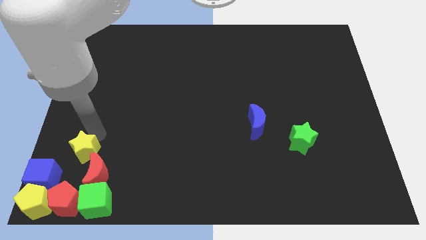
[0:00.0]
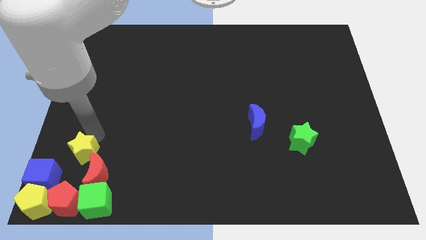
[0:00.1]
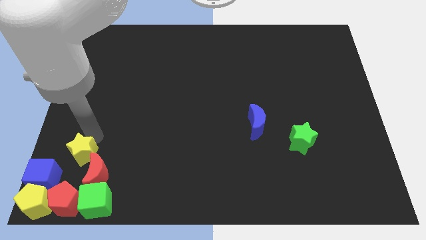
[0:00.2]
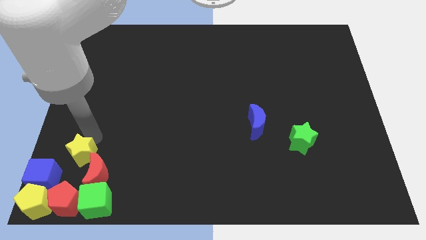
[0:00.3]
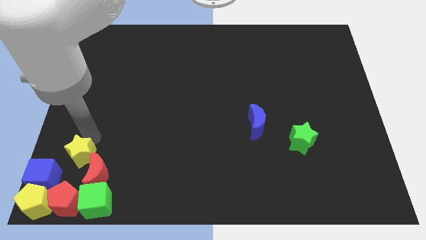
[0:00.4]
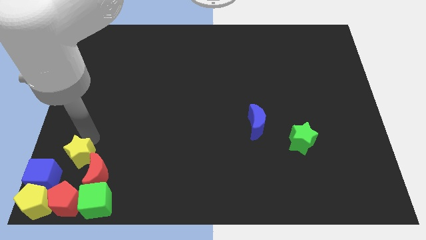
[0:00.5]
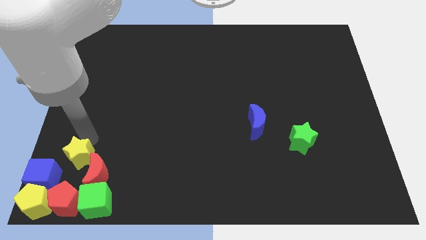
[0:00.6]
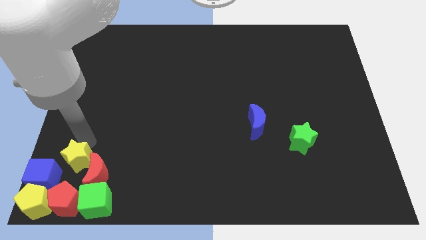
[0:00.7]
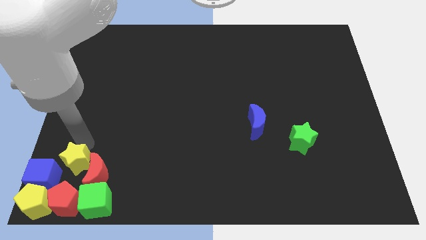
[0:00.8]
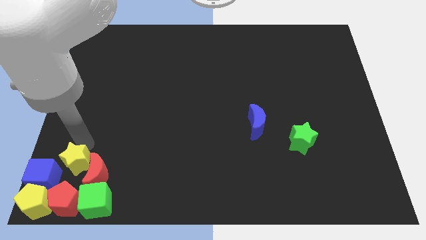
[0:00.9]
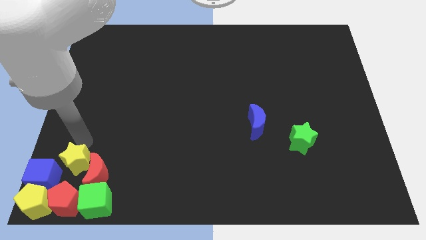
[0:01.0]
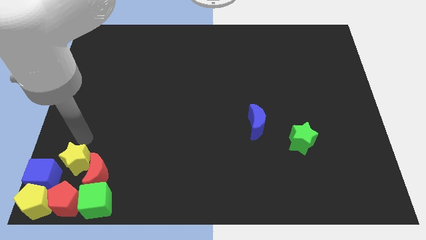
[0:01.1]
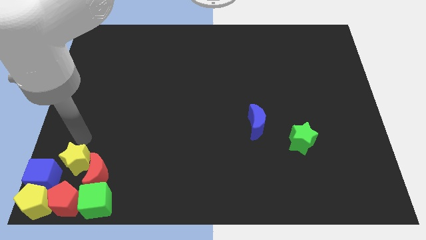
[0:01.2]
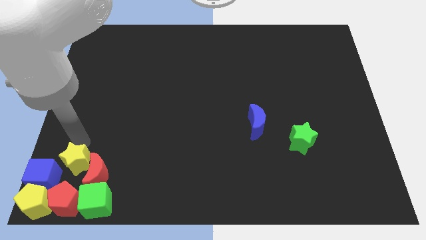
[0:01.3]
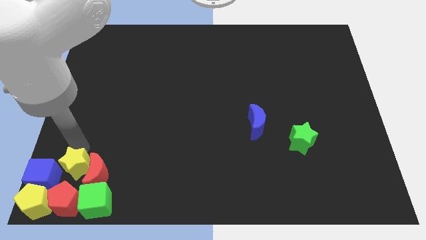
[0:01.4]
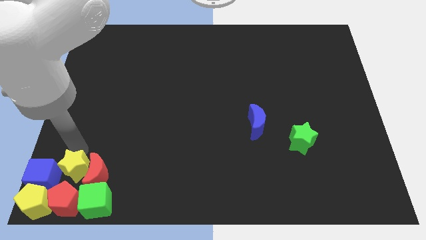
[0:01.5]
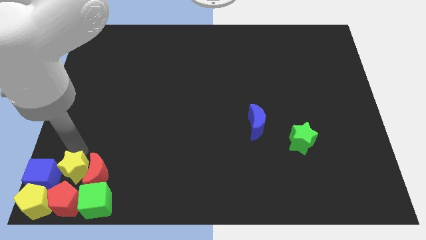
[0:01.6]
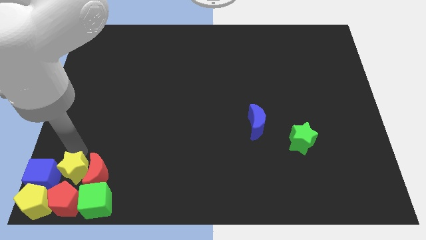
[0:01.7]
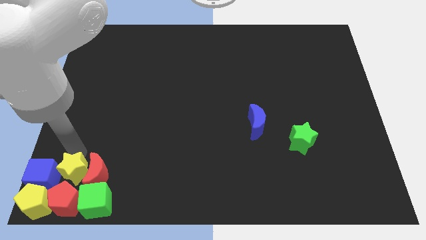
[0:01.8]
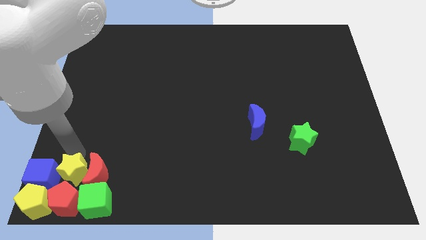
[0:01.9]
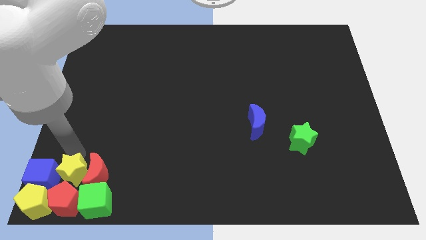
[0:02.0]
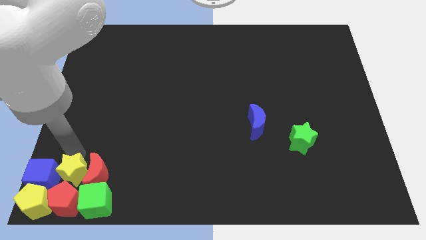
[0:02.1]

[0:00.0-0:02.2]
place the yellow star in between red moon and blue cube

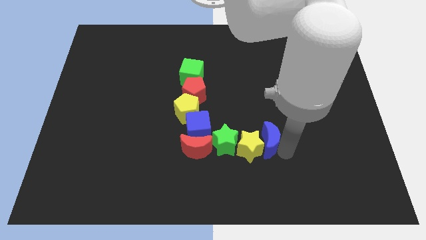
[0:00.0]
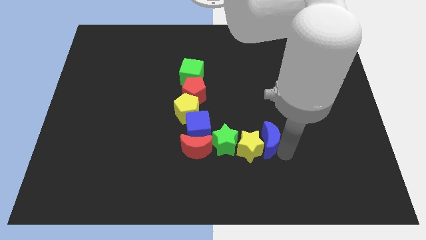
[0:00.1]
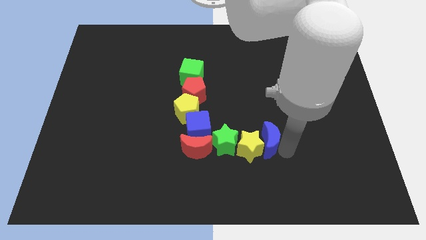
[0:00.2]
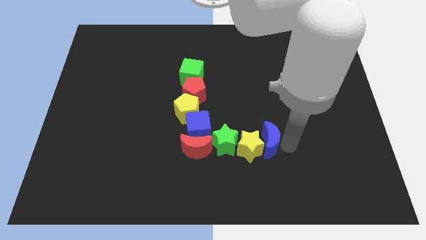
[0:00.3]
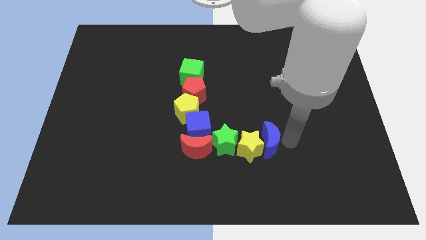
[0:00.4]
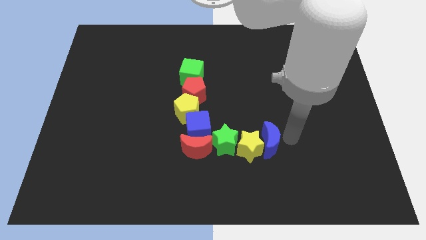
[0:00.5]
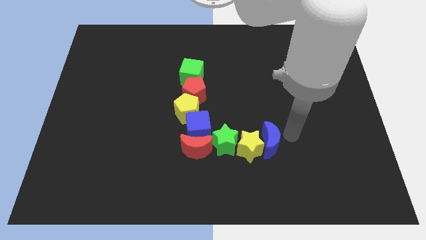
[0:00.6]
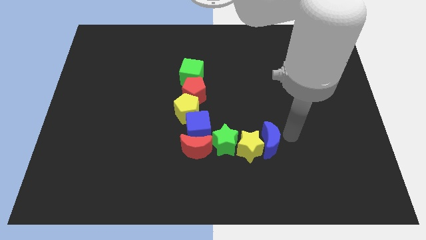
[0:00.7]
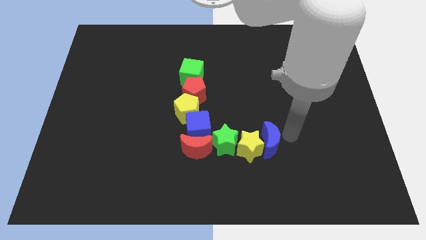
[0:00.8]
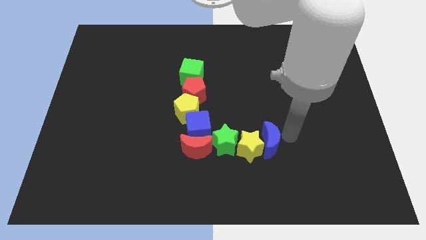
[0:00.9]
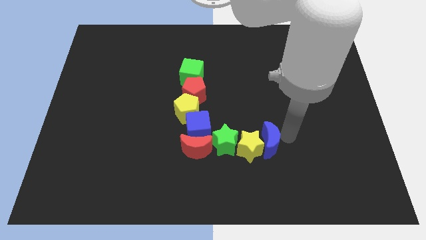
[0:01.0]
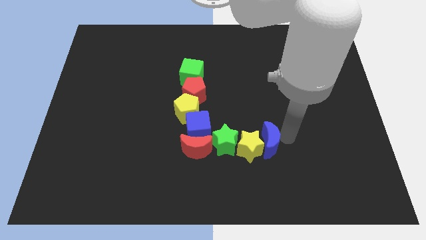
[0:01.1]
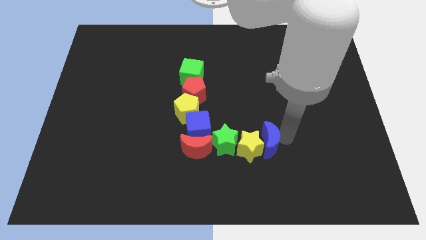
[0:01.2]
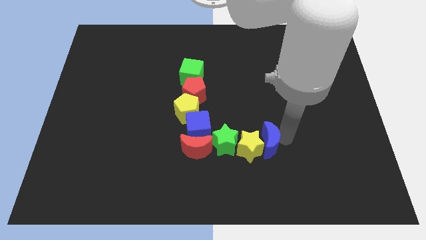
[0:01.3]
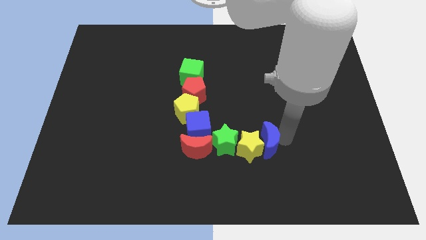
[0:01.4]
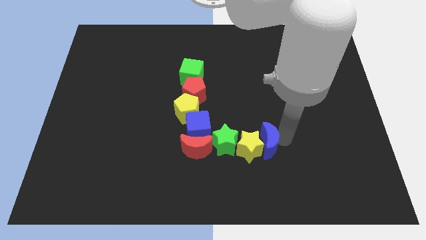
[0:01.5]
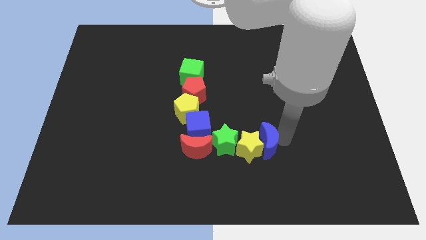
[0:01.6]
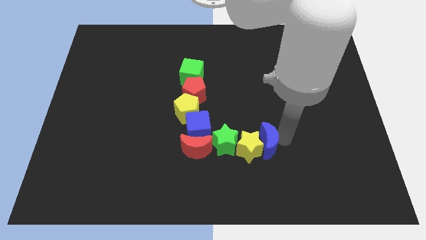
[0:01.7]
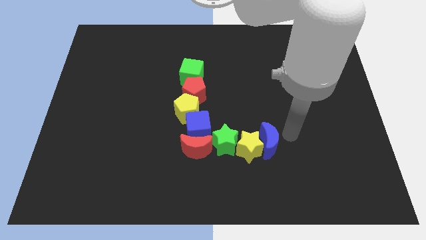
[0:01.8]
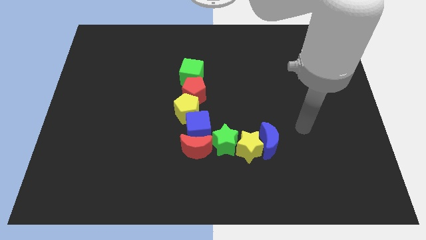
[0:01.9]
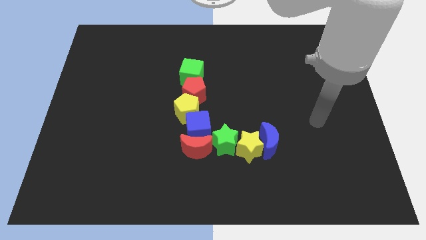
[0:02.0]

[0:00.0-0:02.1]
adjust the blue crescent into the yellow star from the right

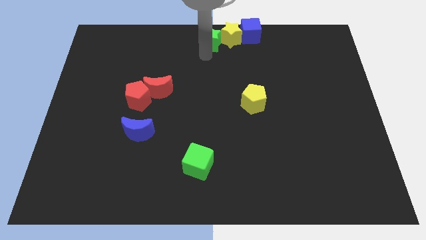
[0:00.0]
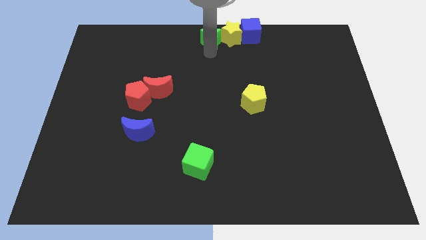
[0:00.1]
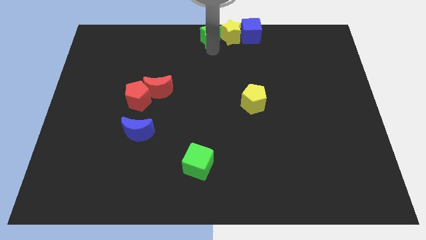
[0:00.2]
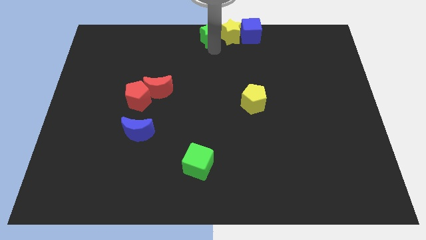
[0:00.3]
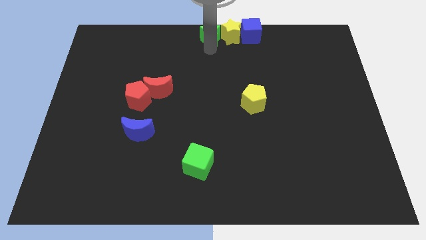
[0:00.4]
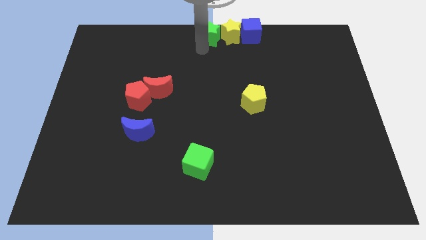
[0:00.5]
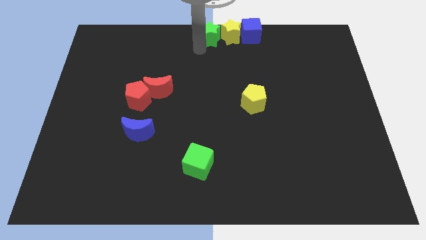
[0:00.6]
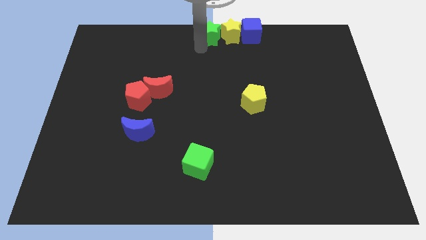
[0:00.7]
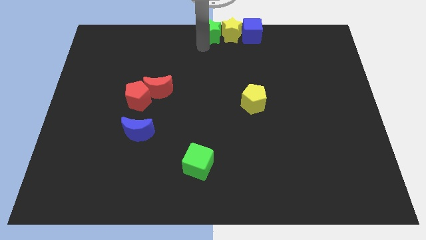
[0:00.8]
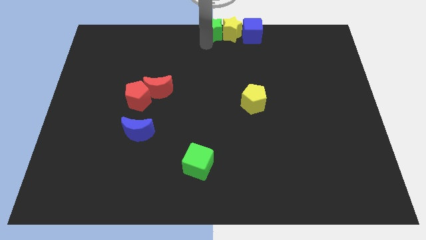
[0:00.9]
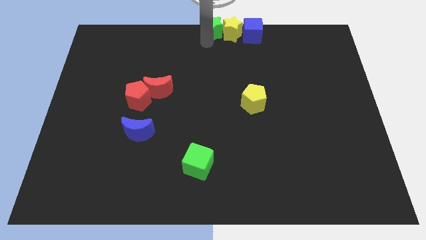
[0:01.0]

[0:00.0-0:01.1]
move green star slightly upwards

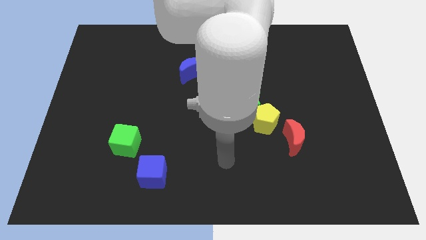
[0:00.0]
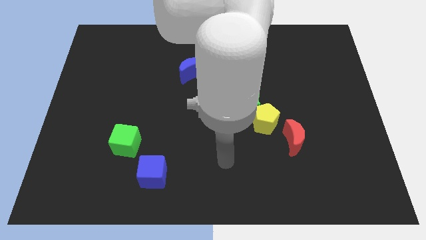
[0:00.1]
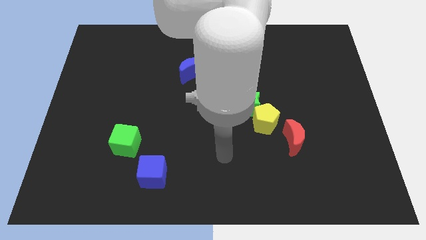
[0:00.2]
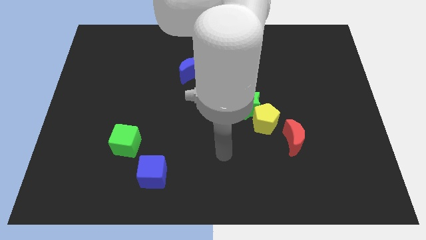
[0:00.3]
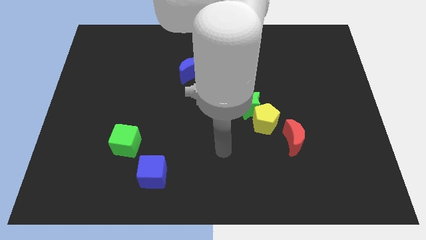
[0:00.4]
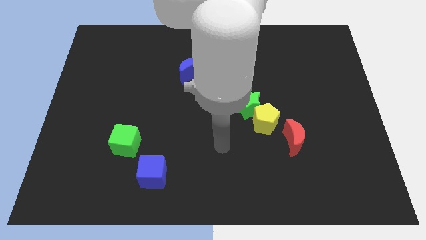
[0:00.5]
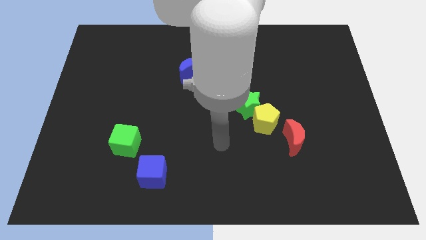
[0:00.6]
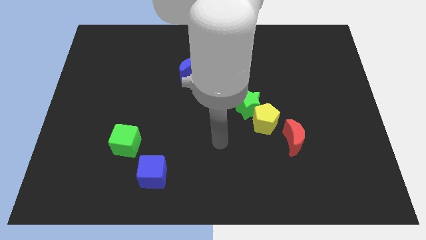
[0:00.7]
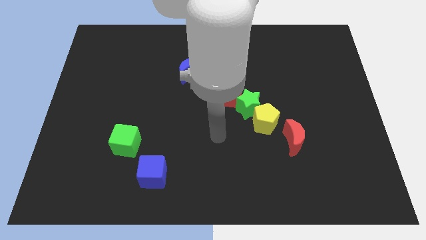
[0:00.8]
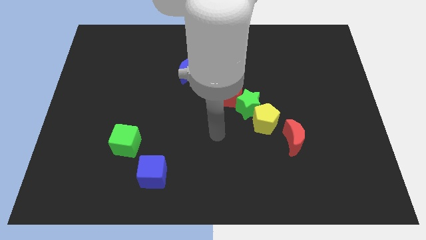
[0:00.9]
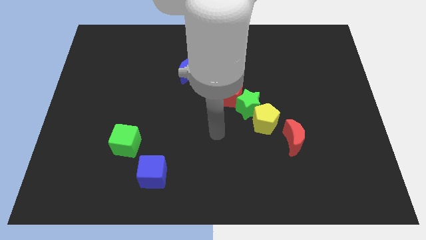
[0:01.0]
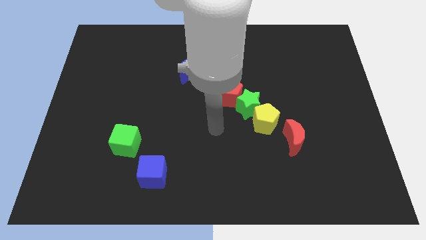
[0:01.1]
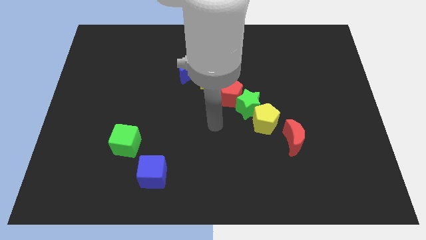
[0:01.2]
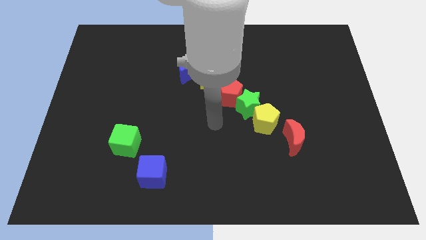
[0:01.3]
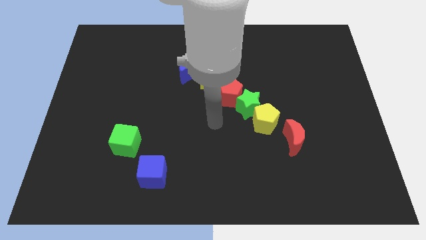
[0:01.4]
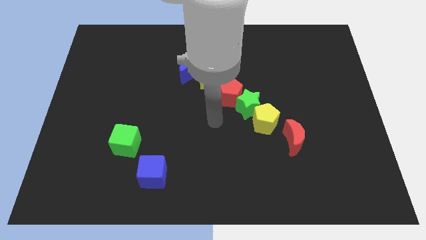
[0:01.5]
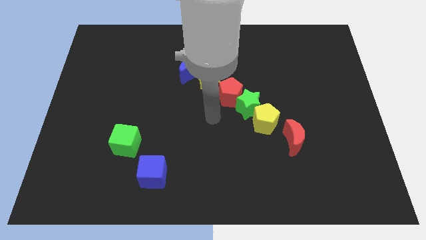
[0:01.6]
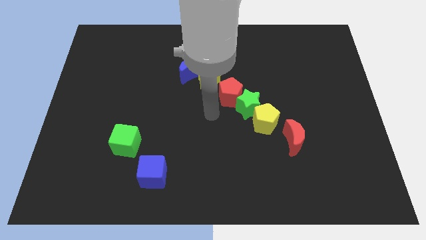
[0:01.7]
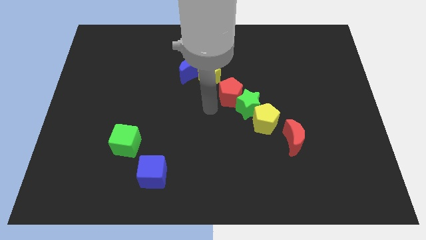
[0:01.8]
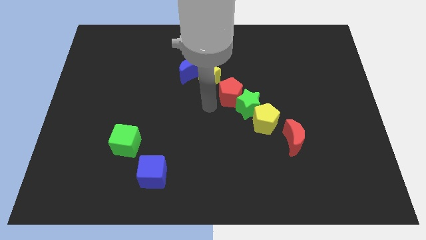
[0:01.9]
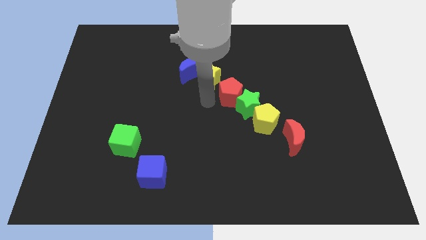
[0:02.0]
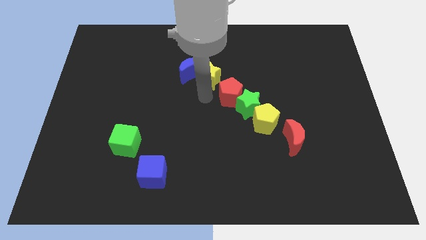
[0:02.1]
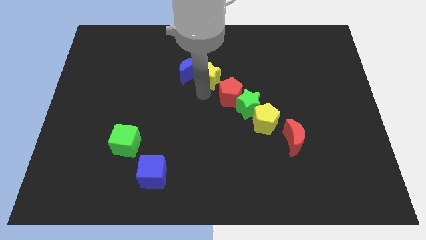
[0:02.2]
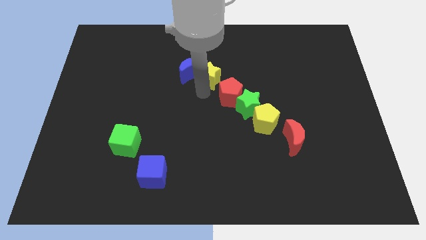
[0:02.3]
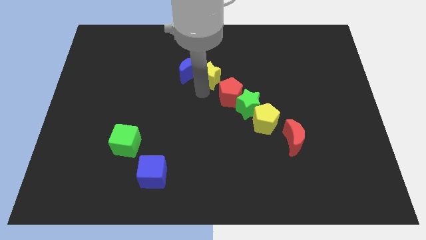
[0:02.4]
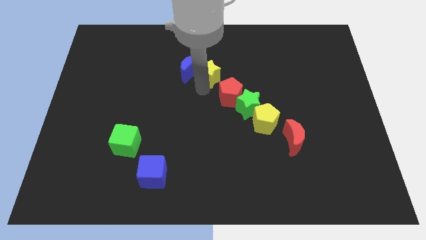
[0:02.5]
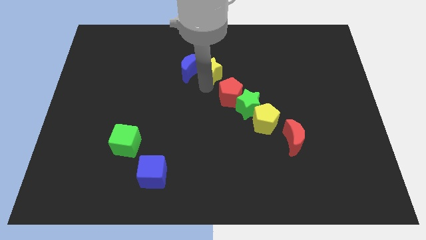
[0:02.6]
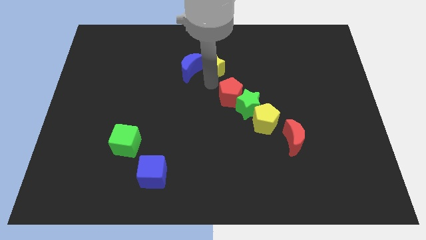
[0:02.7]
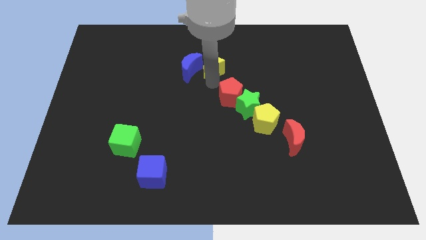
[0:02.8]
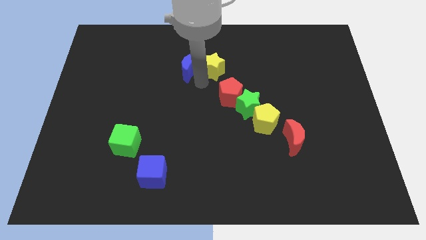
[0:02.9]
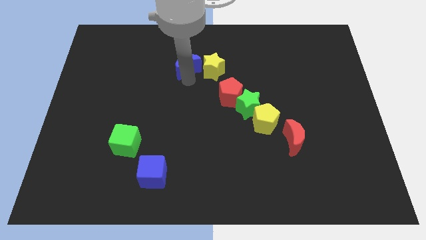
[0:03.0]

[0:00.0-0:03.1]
move the yellow star slightly

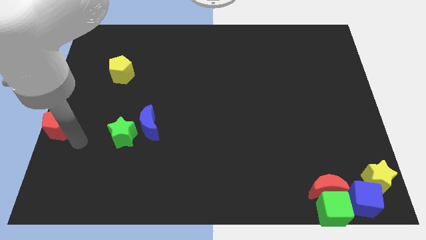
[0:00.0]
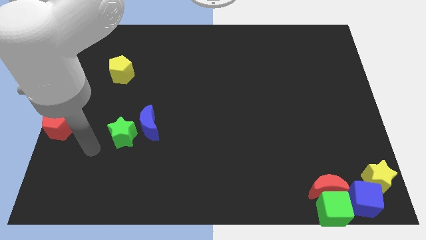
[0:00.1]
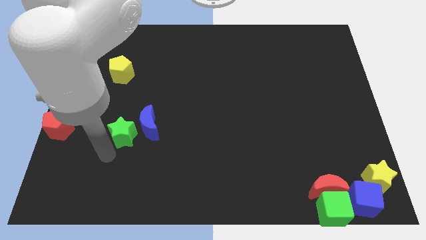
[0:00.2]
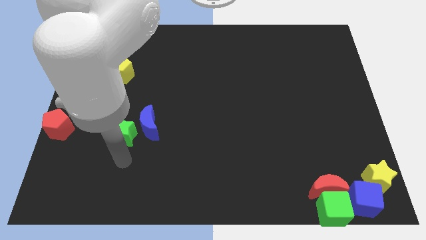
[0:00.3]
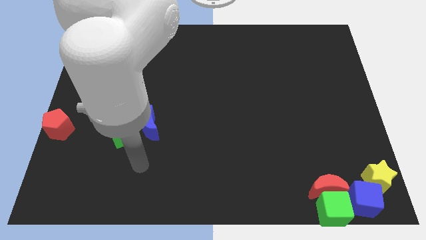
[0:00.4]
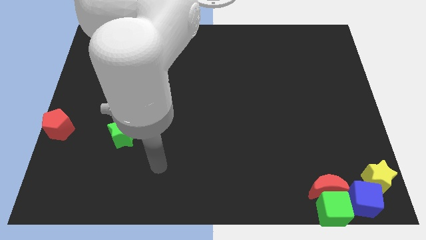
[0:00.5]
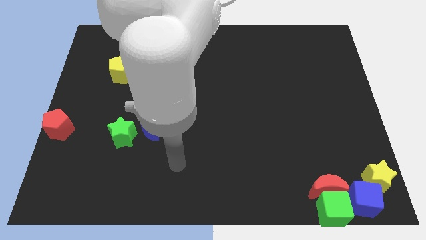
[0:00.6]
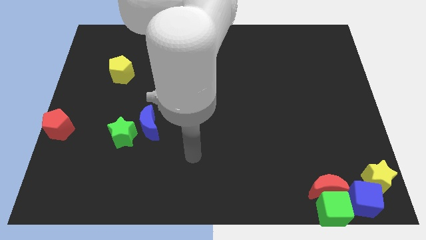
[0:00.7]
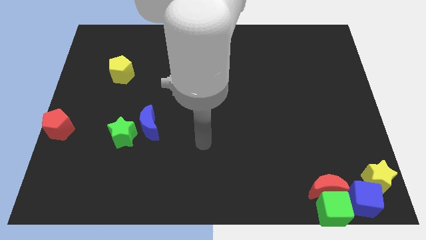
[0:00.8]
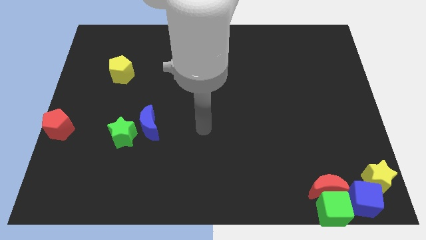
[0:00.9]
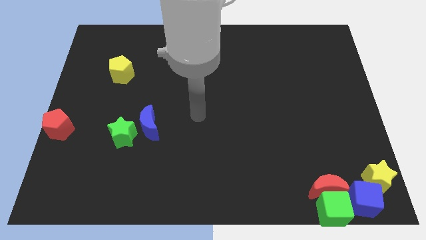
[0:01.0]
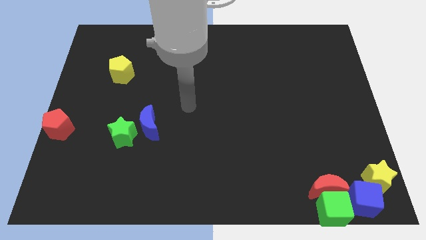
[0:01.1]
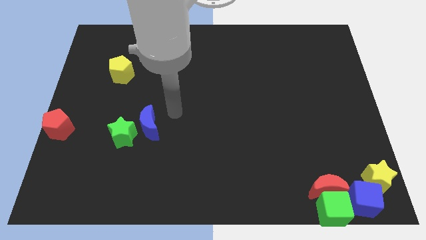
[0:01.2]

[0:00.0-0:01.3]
point your arm at the right of the blue crescent
